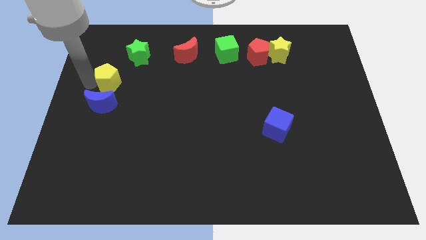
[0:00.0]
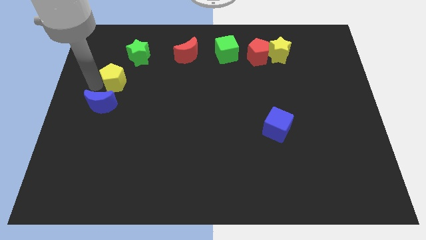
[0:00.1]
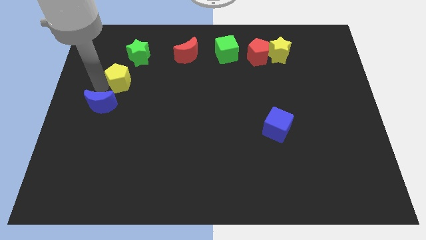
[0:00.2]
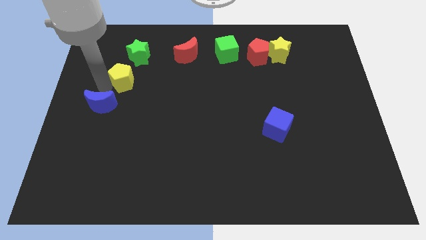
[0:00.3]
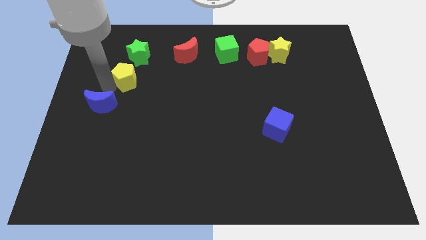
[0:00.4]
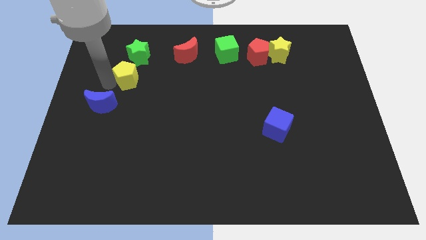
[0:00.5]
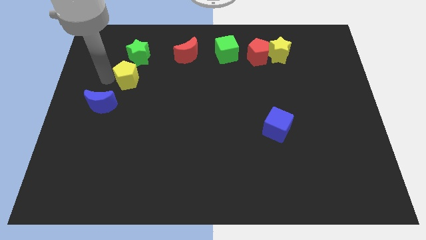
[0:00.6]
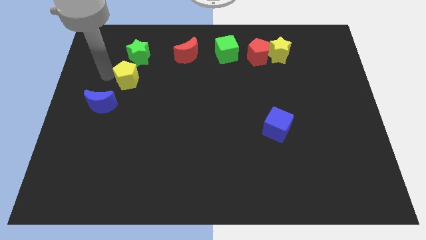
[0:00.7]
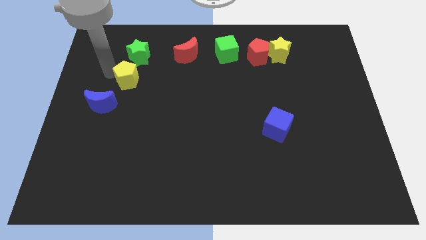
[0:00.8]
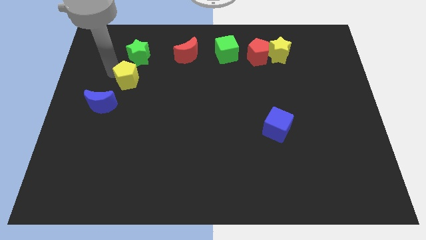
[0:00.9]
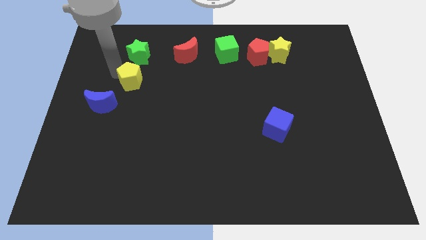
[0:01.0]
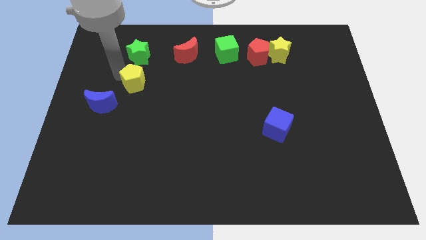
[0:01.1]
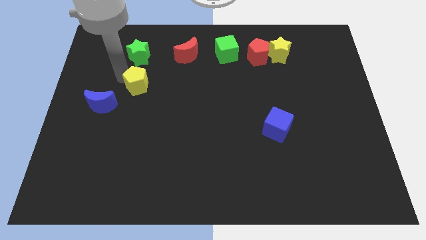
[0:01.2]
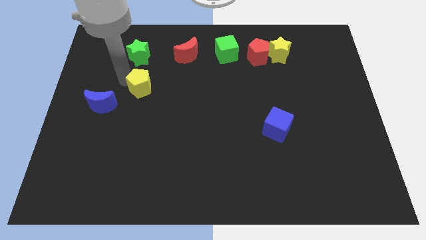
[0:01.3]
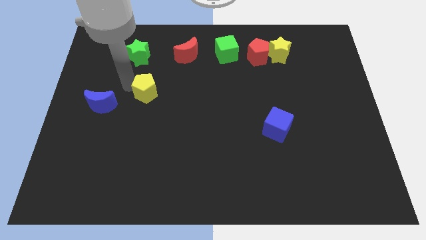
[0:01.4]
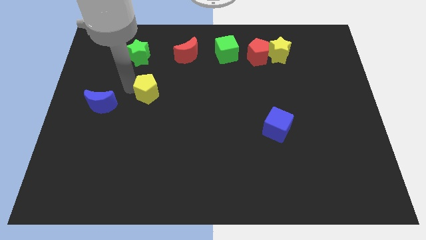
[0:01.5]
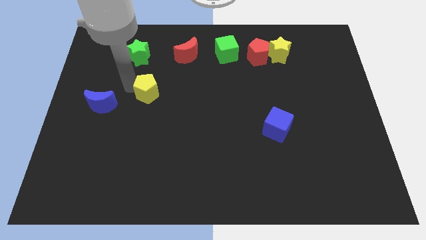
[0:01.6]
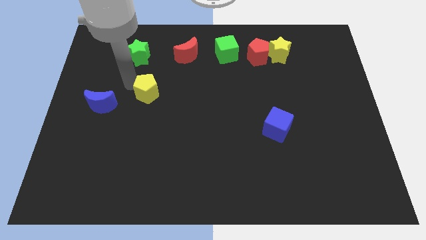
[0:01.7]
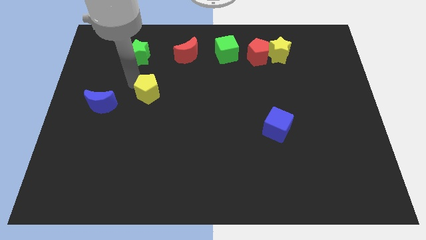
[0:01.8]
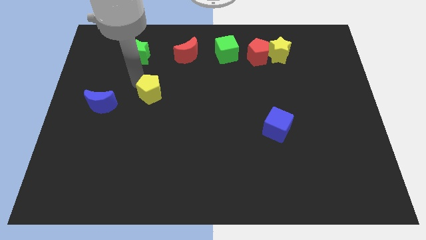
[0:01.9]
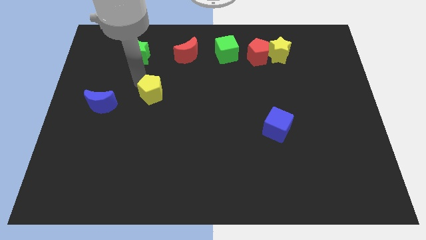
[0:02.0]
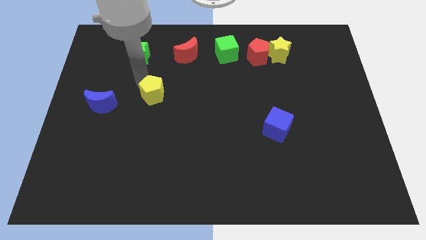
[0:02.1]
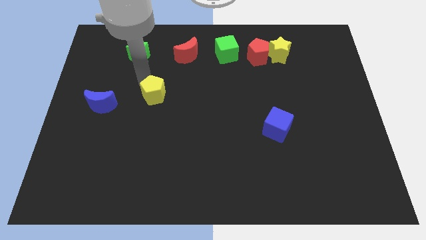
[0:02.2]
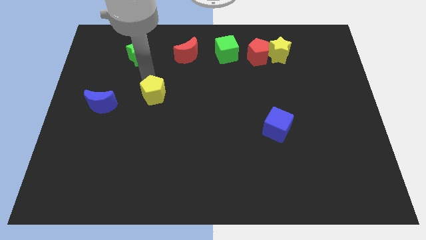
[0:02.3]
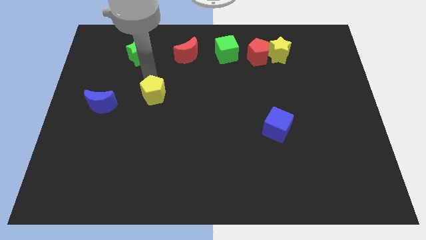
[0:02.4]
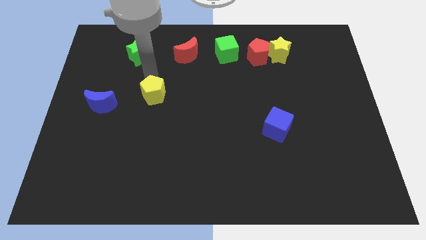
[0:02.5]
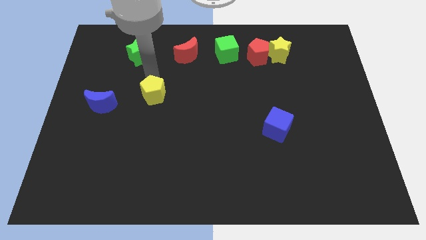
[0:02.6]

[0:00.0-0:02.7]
move the yellow pentagon near the blue moon

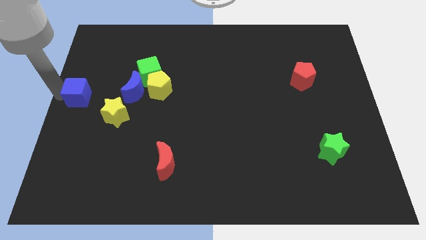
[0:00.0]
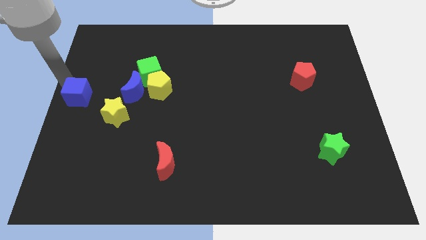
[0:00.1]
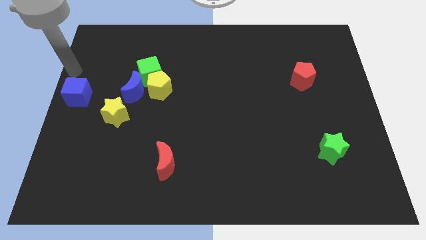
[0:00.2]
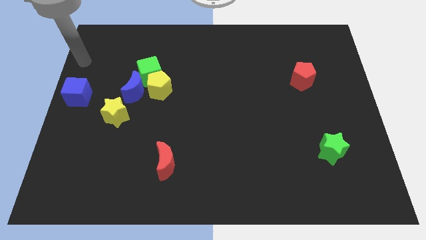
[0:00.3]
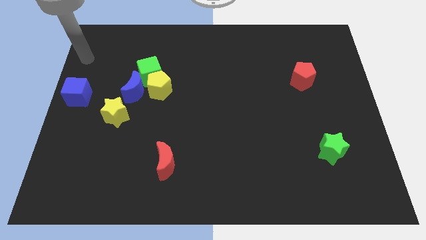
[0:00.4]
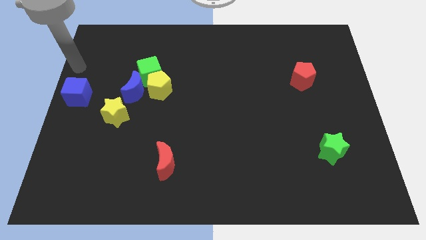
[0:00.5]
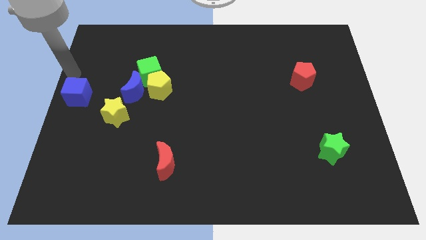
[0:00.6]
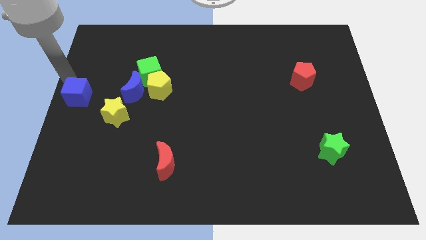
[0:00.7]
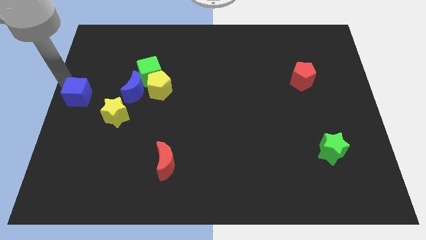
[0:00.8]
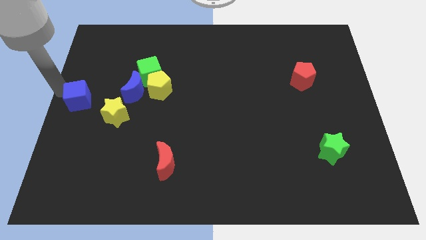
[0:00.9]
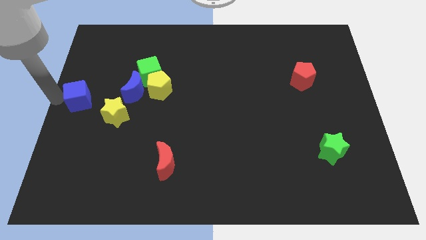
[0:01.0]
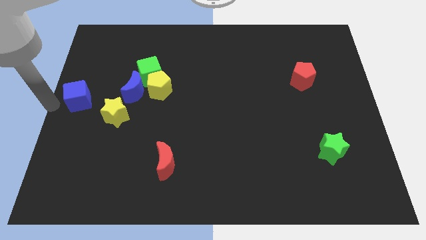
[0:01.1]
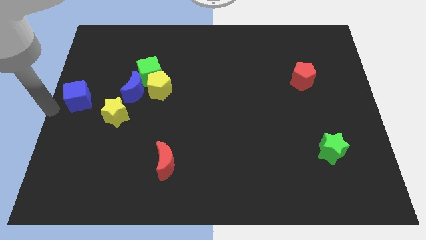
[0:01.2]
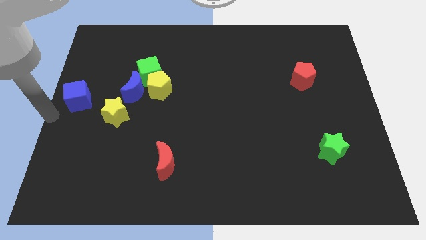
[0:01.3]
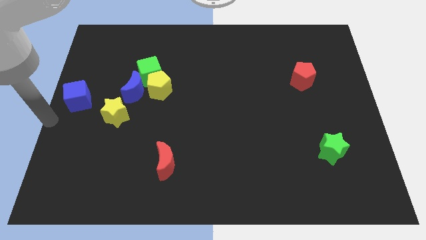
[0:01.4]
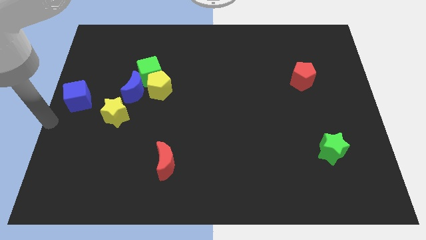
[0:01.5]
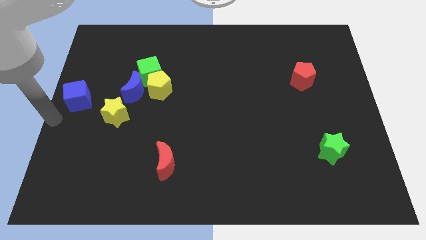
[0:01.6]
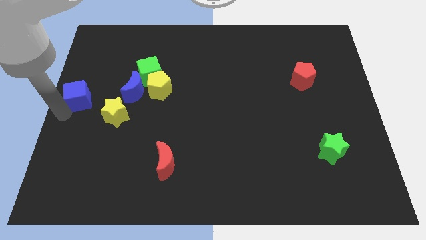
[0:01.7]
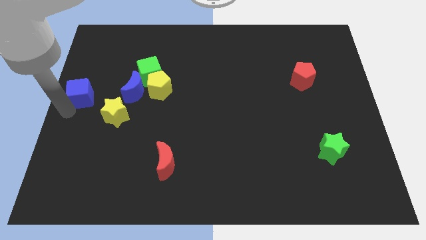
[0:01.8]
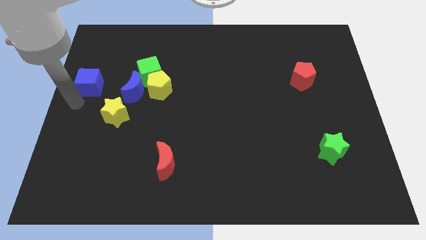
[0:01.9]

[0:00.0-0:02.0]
place the blue cube diagonal to the left of yellow star

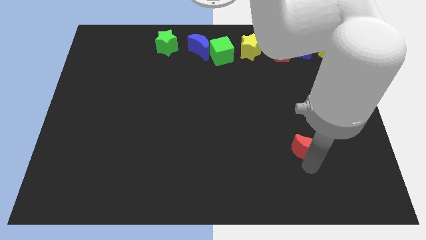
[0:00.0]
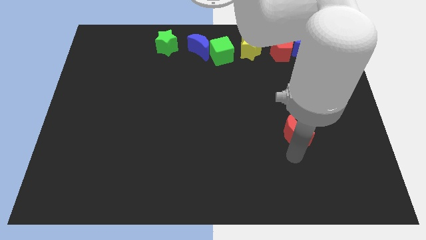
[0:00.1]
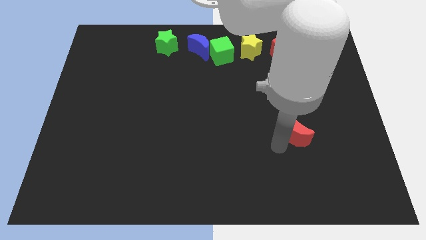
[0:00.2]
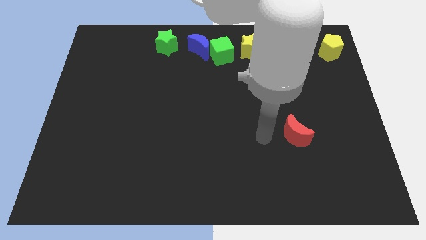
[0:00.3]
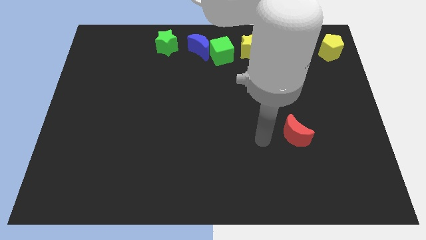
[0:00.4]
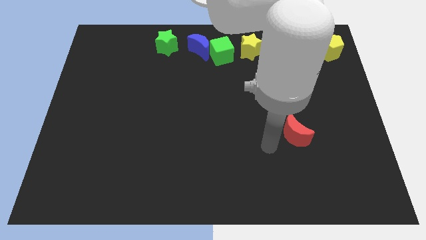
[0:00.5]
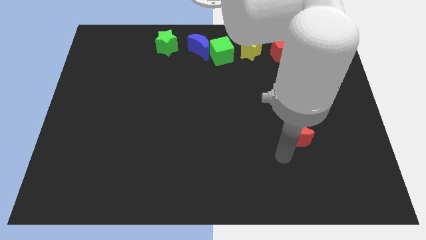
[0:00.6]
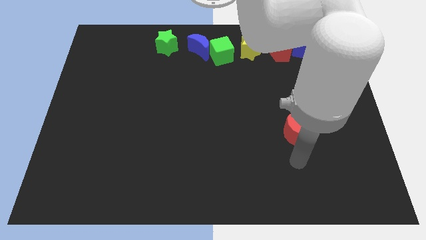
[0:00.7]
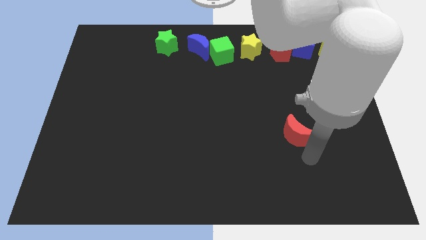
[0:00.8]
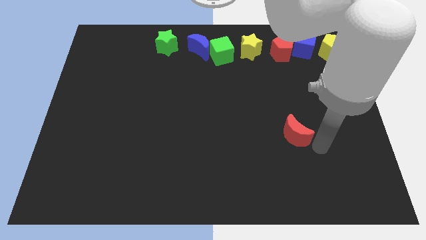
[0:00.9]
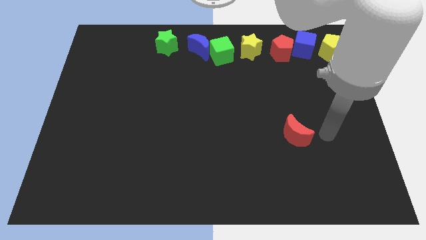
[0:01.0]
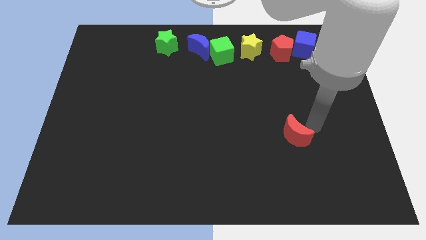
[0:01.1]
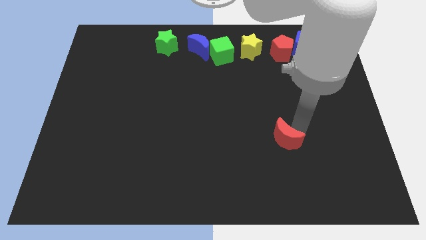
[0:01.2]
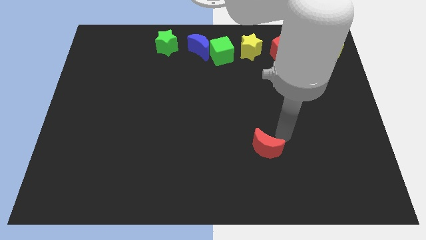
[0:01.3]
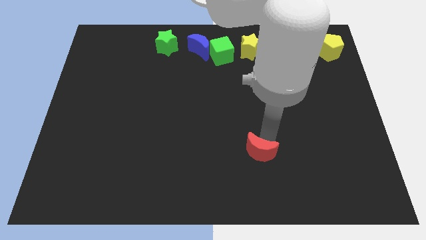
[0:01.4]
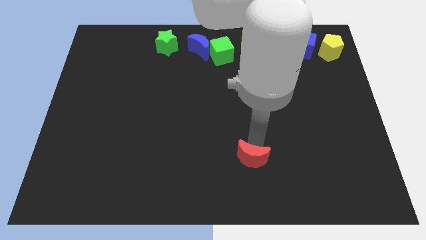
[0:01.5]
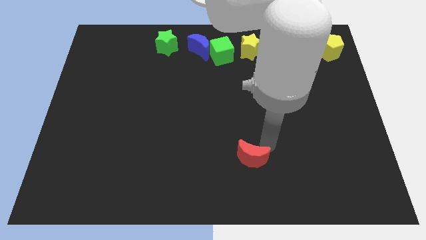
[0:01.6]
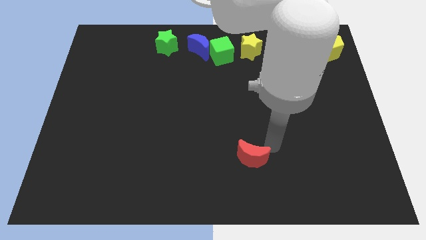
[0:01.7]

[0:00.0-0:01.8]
drag the red moon toward the bottom center

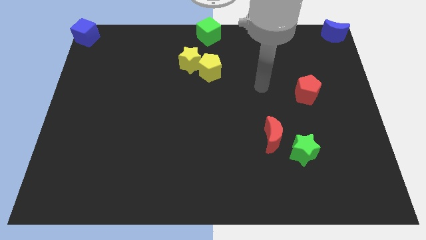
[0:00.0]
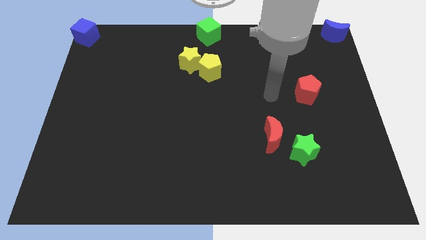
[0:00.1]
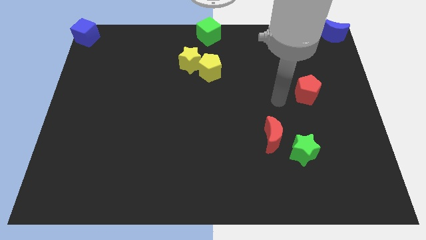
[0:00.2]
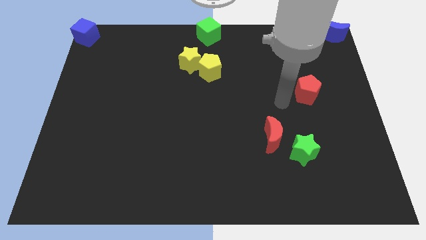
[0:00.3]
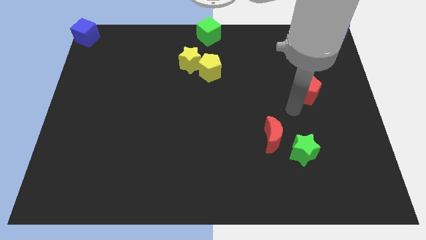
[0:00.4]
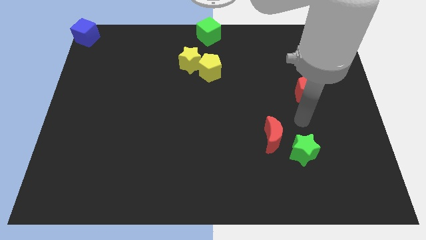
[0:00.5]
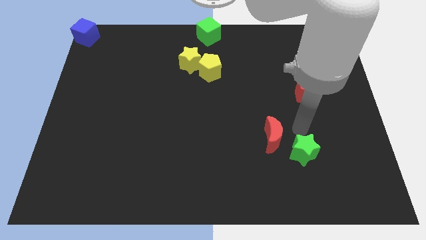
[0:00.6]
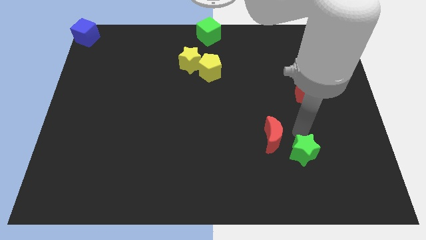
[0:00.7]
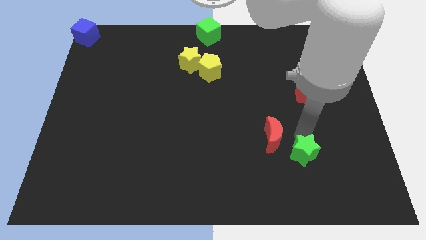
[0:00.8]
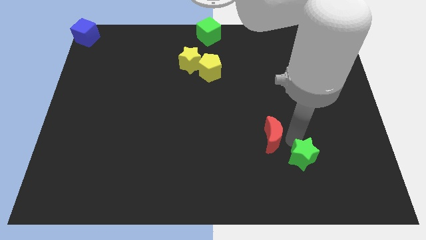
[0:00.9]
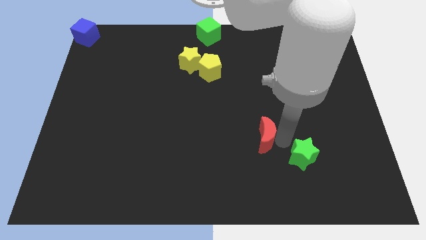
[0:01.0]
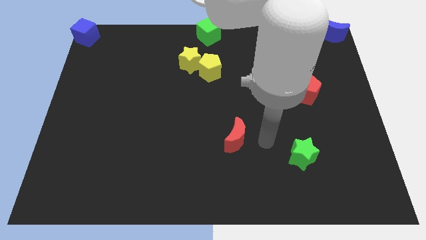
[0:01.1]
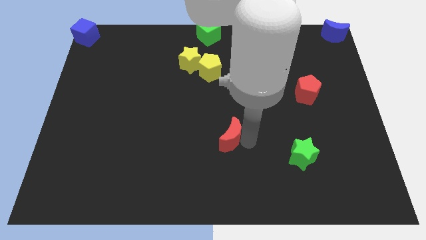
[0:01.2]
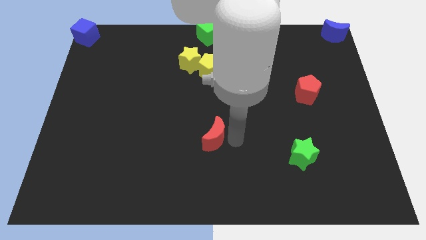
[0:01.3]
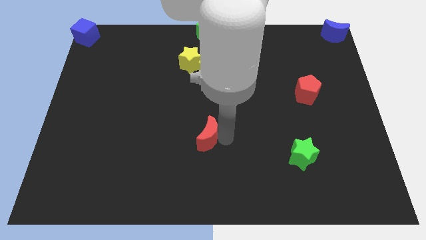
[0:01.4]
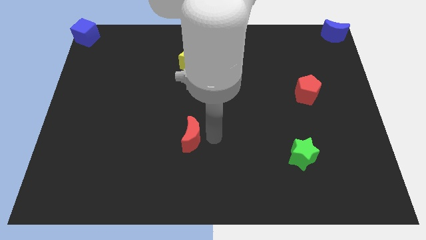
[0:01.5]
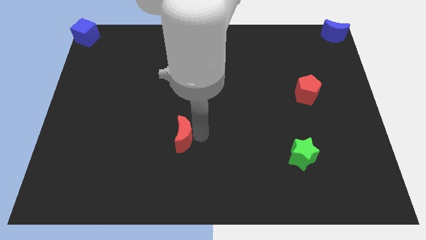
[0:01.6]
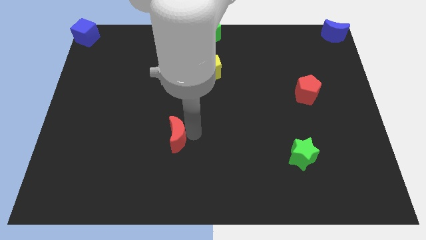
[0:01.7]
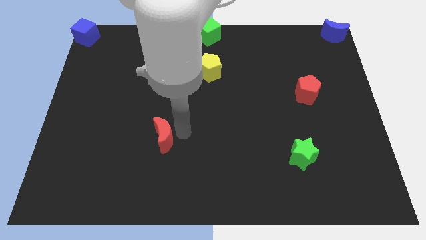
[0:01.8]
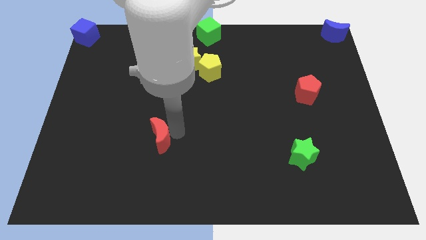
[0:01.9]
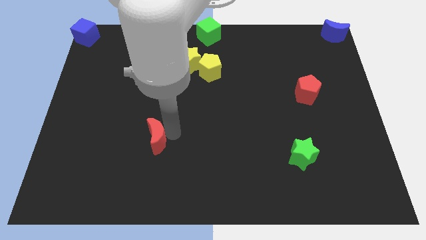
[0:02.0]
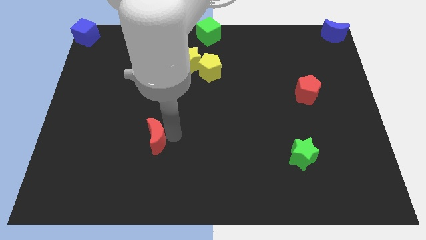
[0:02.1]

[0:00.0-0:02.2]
move red moon towards left side

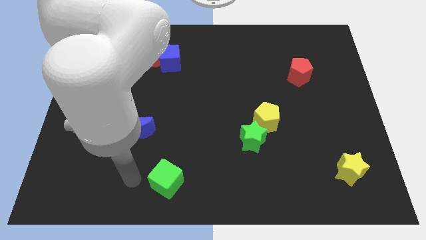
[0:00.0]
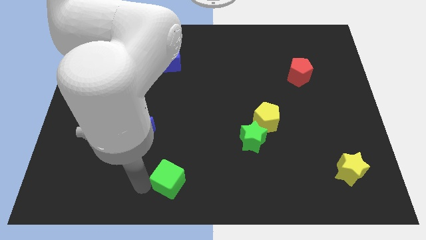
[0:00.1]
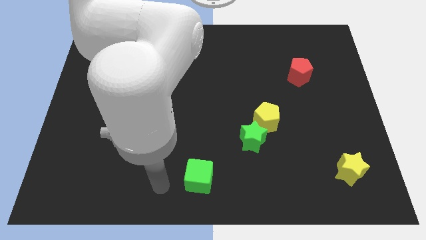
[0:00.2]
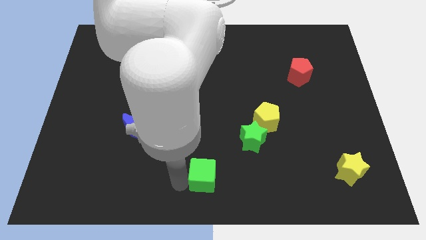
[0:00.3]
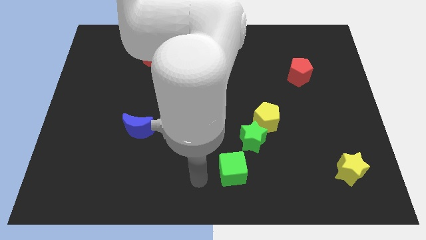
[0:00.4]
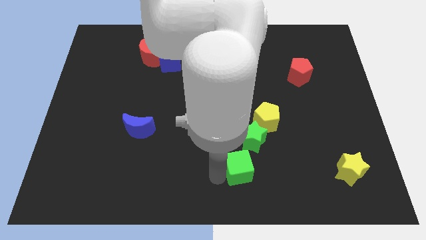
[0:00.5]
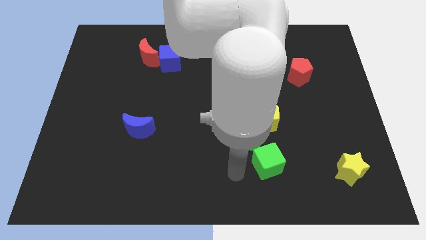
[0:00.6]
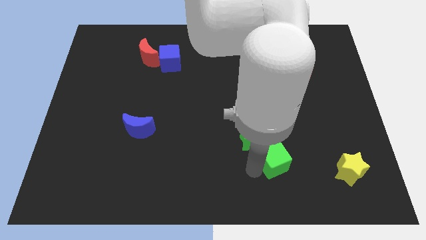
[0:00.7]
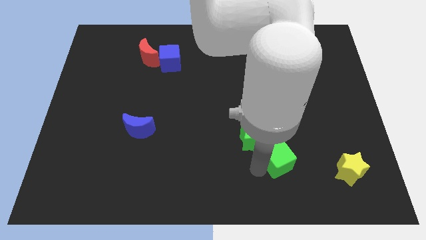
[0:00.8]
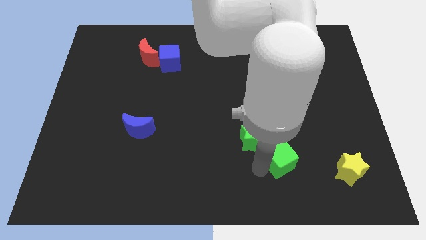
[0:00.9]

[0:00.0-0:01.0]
place the green cube diagonally to the green star
